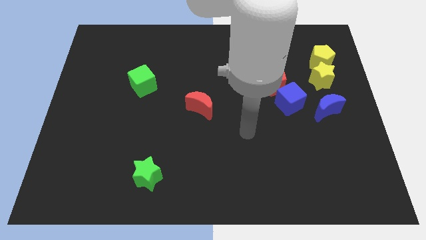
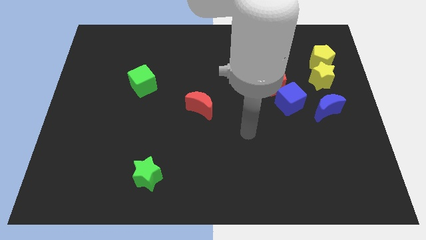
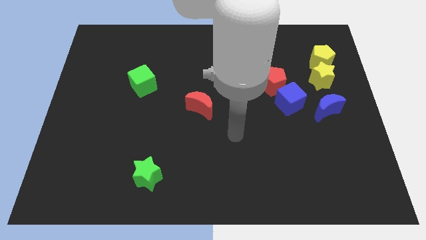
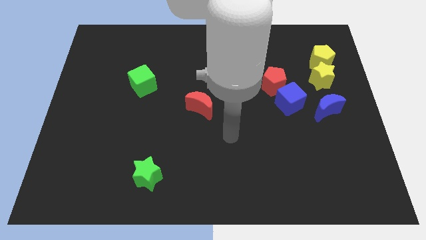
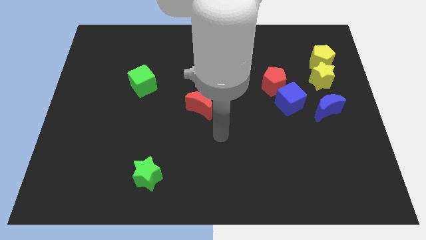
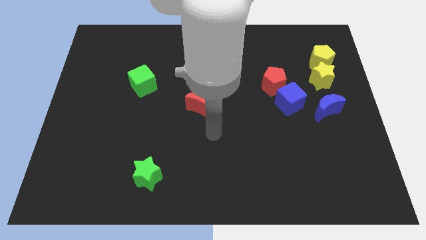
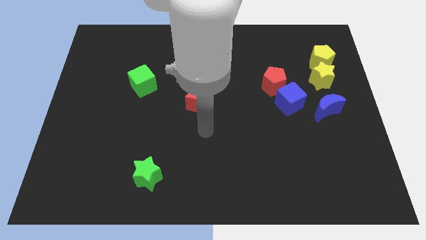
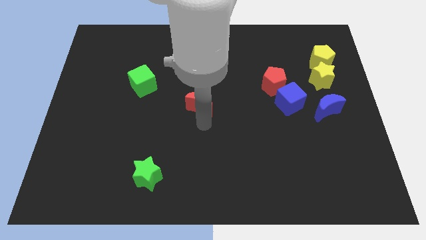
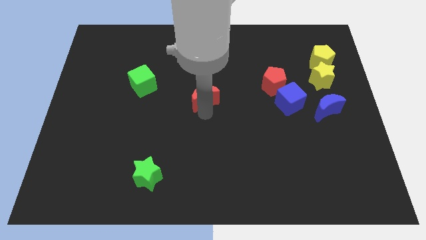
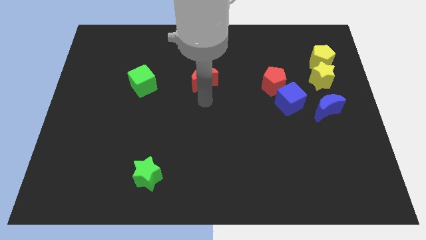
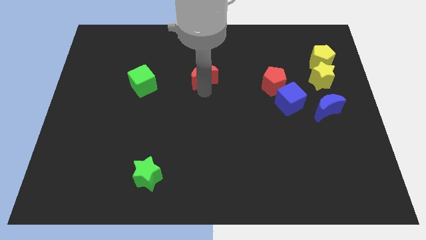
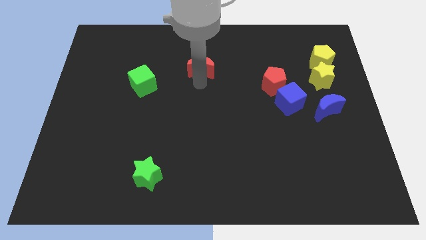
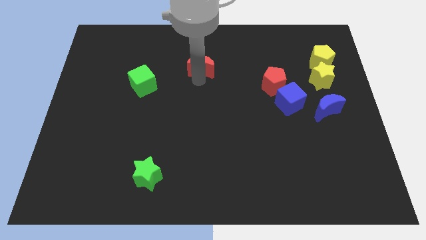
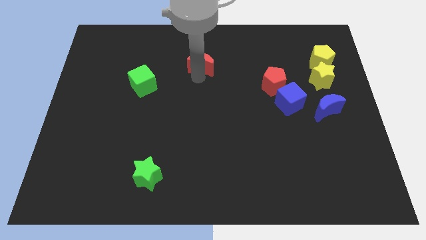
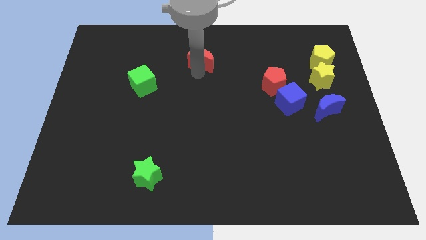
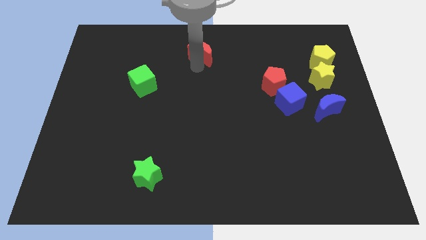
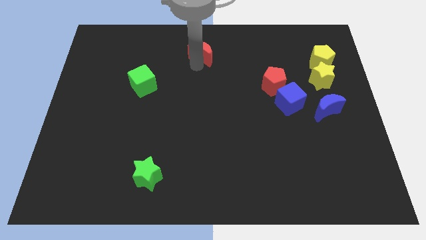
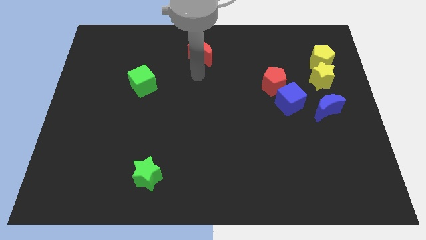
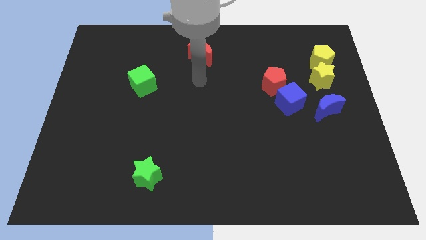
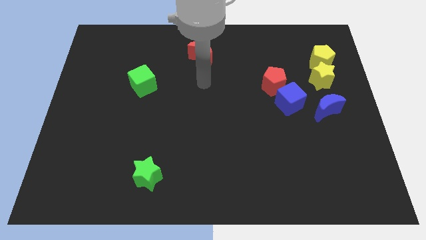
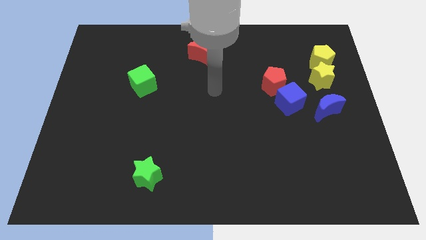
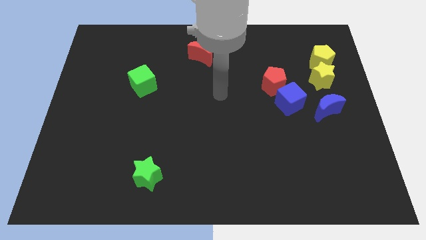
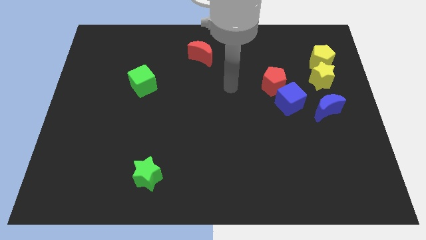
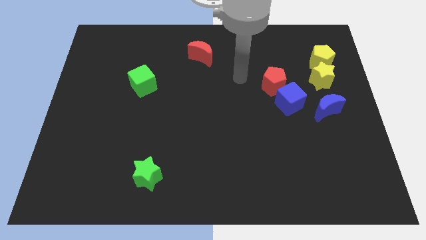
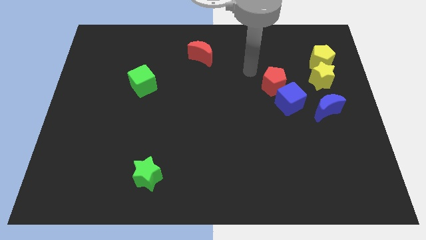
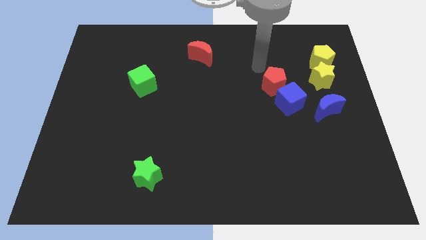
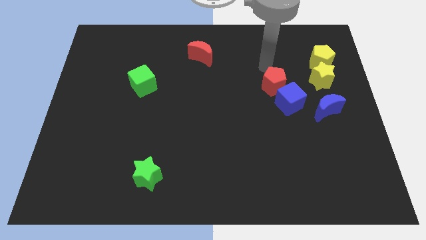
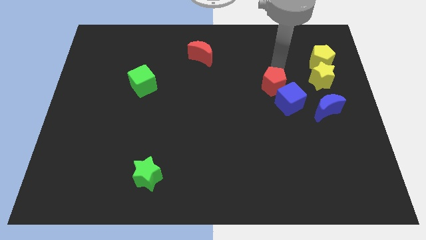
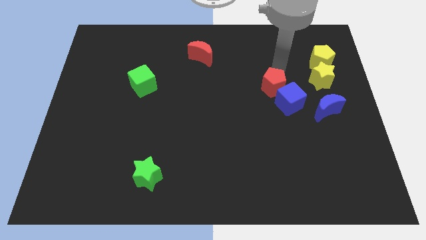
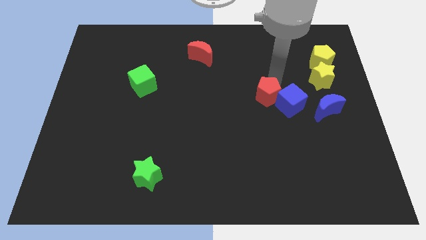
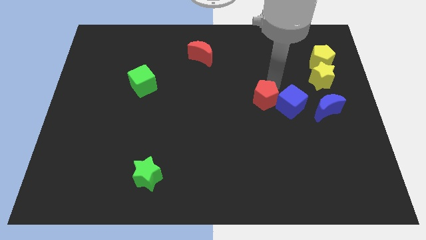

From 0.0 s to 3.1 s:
move the red crescent towards the top center of the board

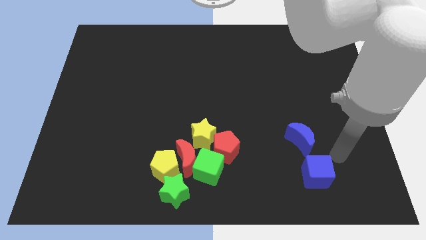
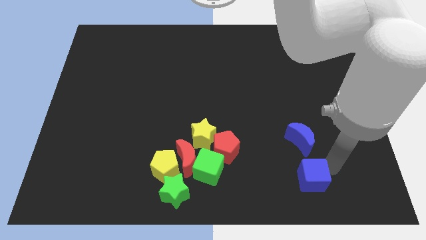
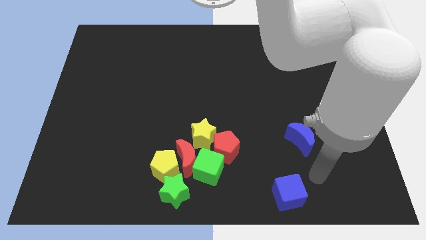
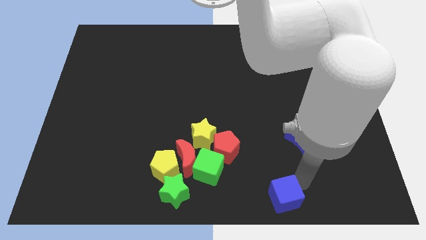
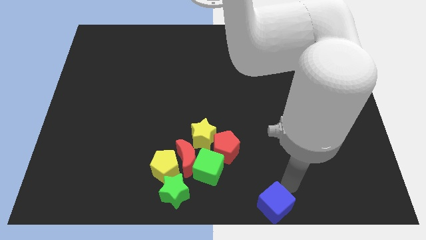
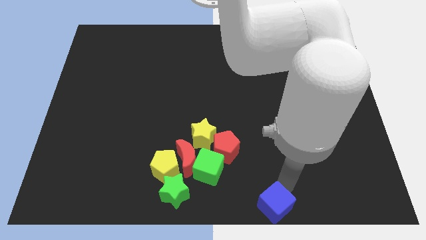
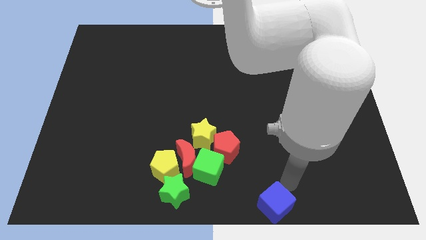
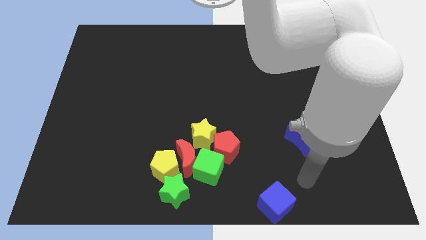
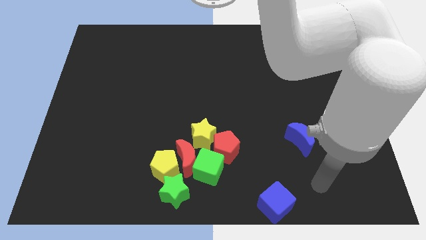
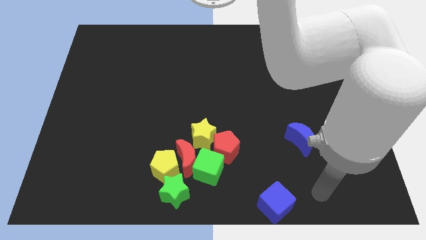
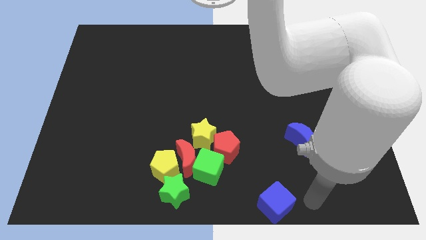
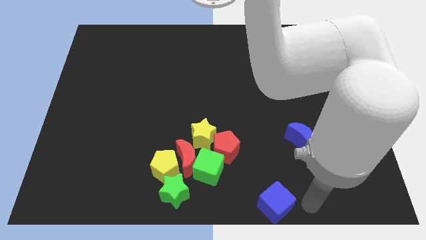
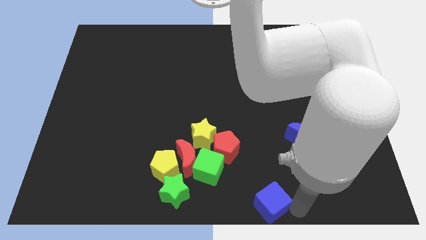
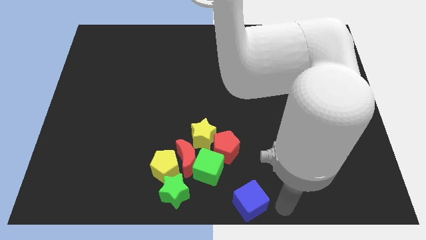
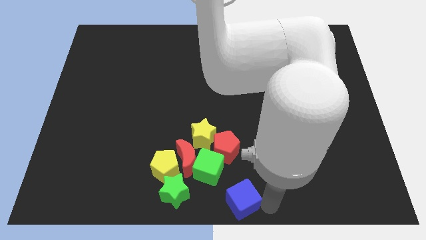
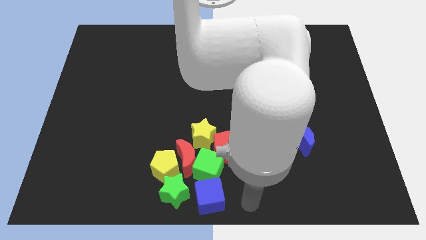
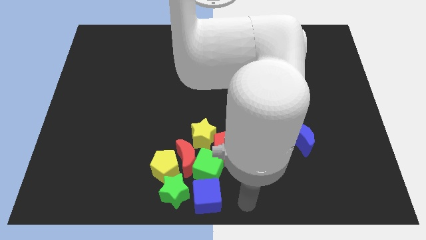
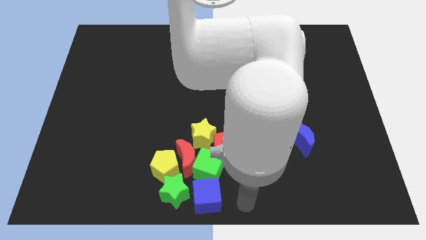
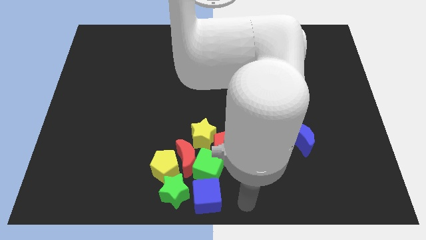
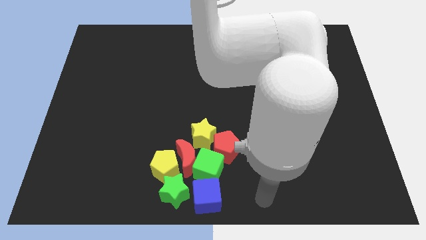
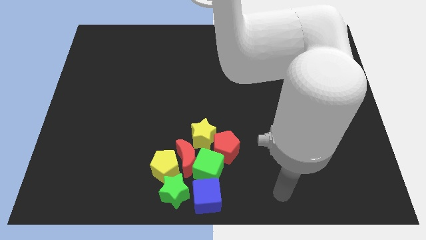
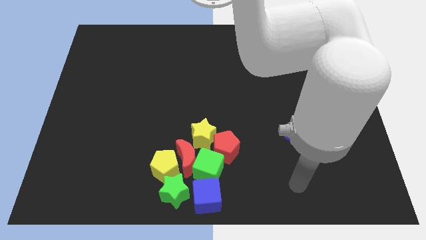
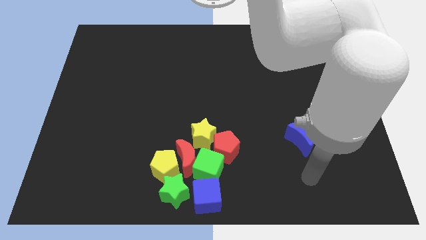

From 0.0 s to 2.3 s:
push the blue cube to the bottom center of the board

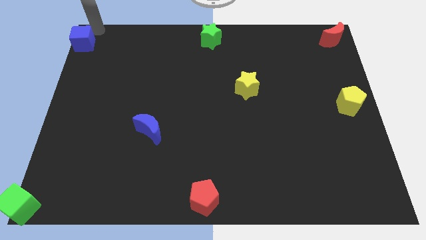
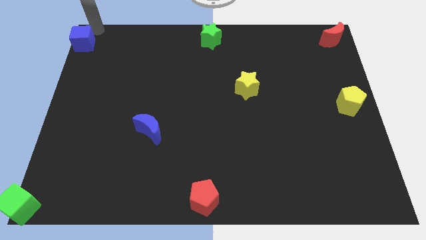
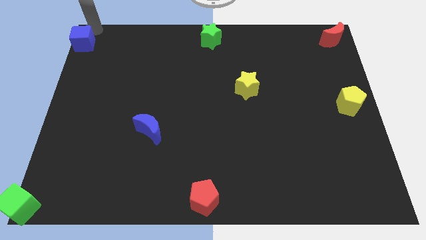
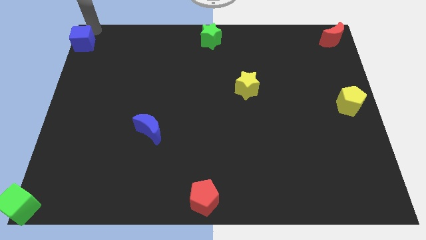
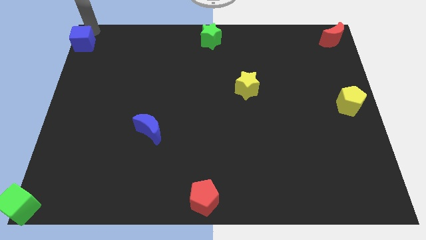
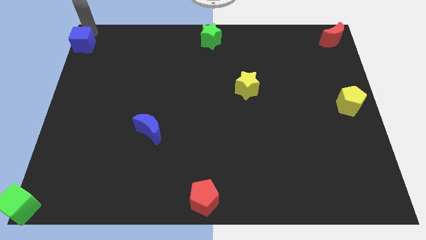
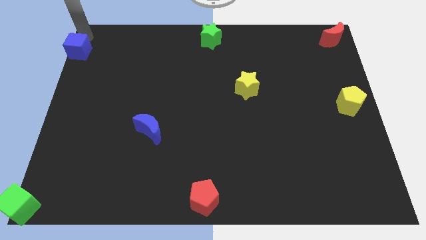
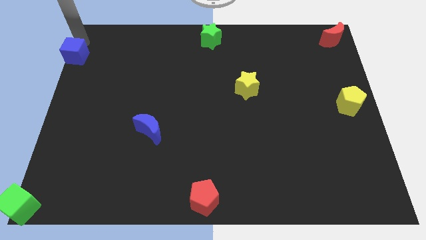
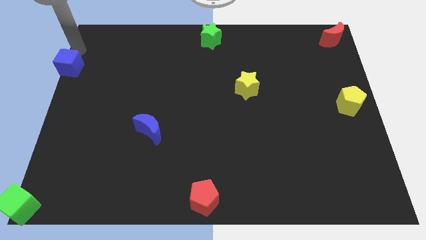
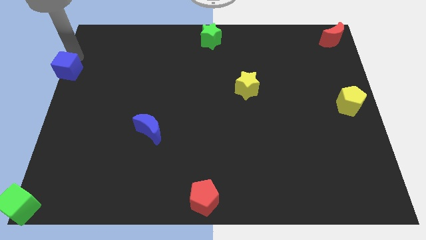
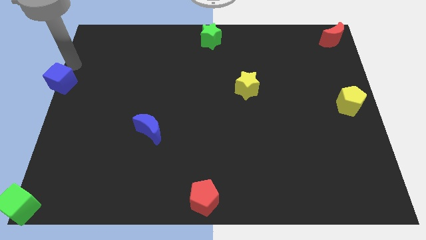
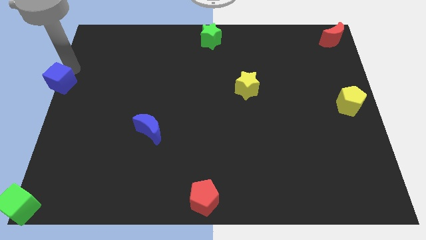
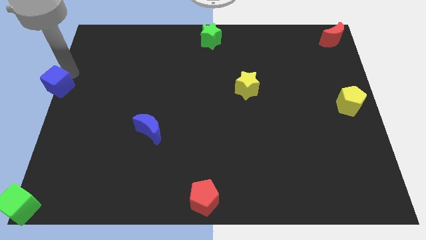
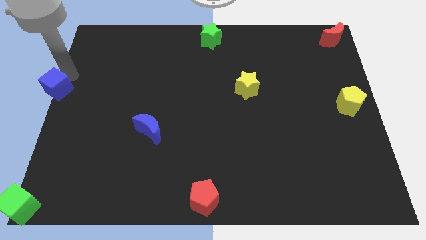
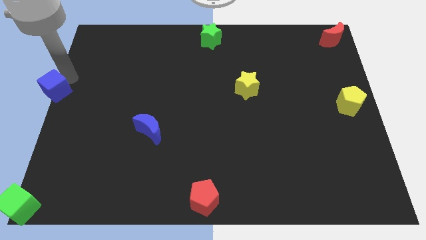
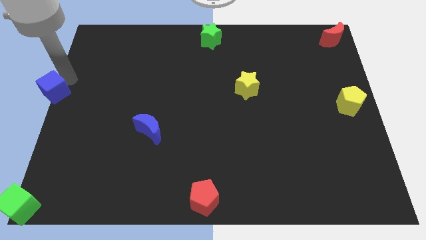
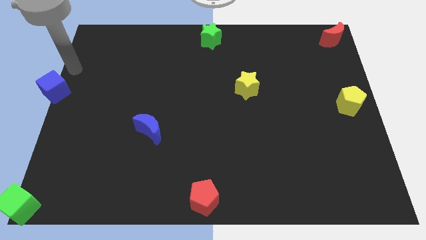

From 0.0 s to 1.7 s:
push the blue cube to the center left of the board

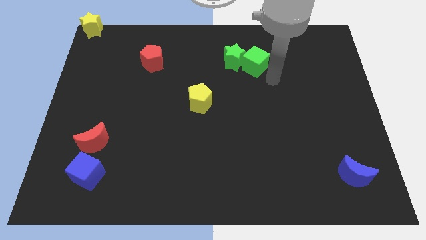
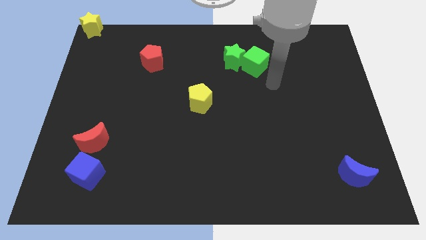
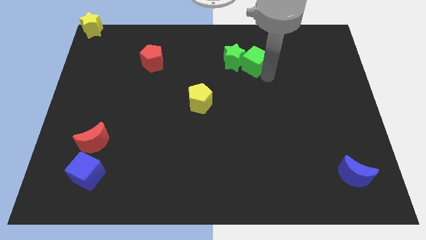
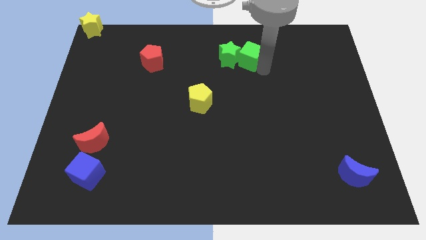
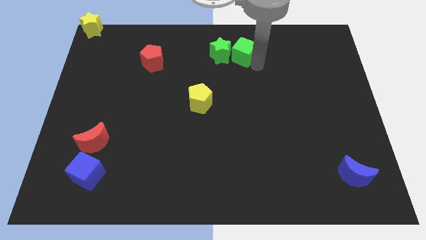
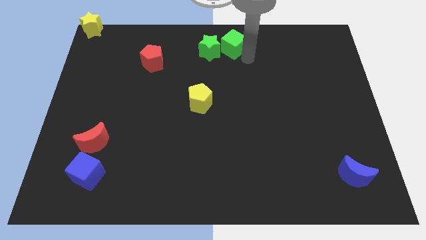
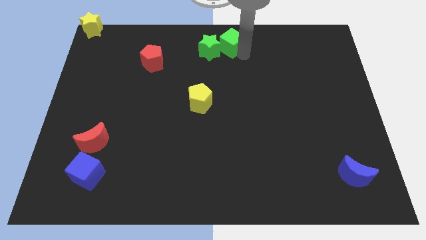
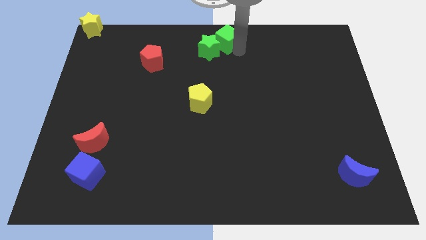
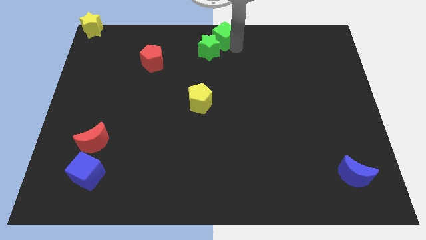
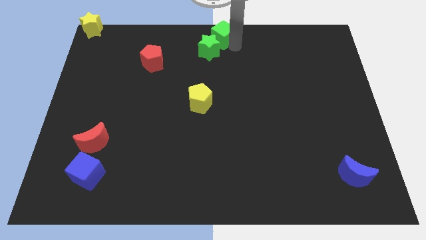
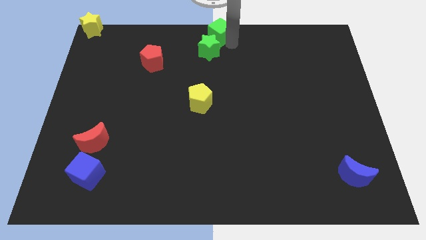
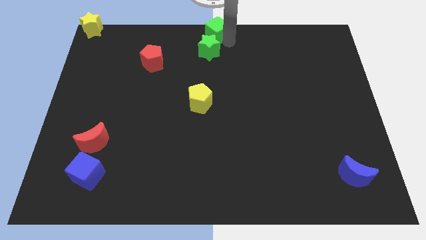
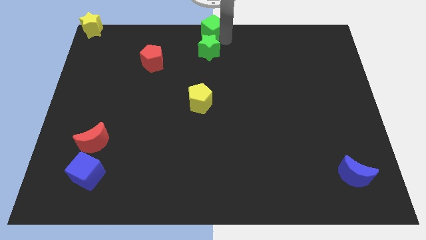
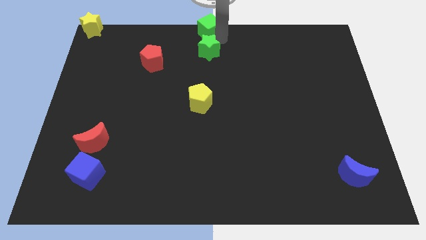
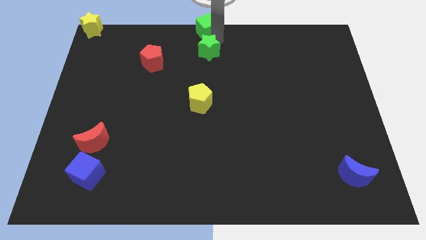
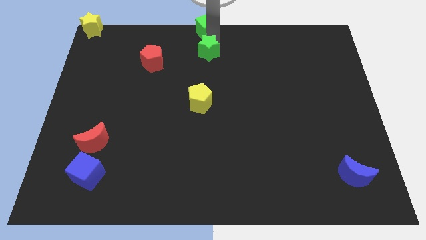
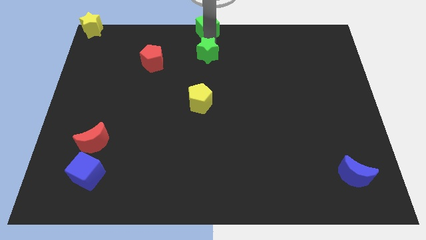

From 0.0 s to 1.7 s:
move green cube vertically above the green star

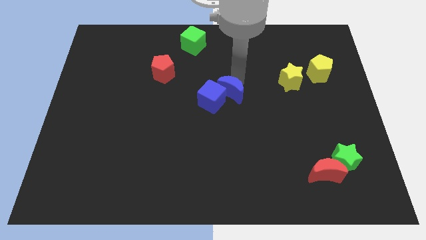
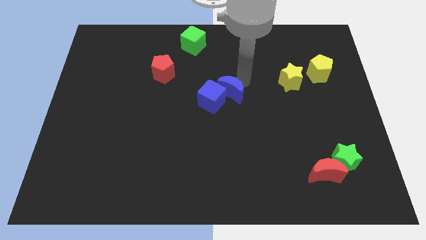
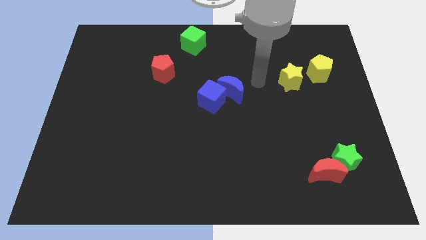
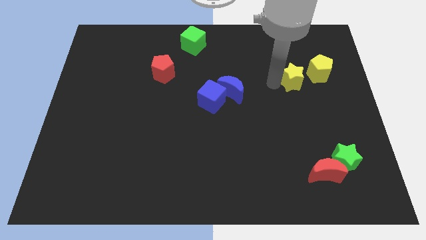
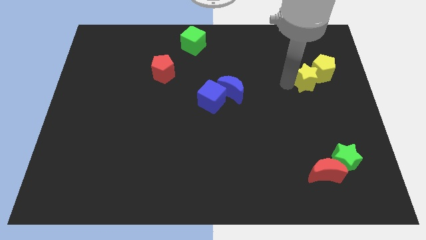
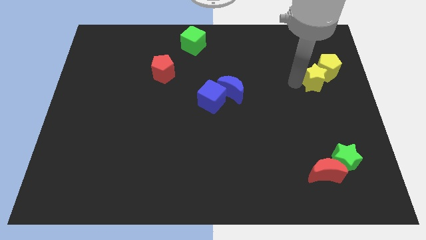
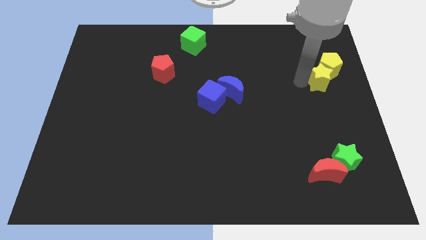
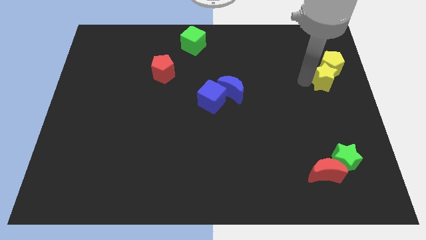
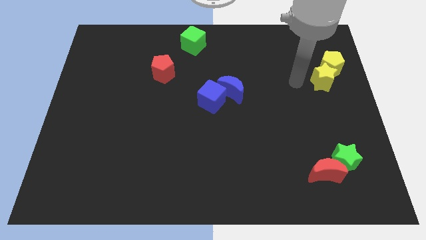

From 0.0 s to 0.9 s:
push the yellow star and yellow pentagon to the center right
